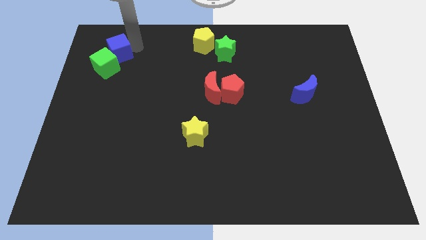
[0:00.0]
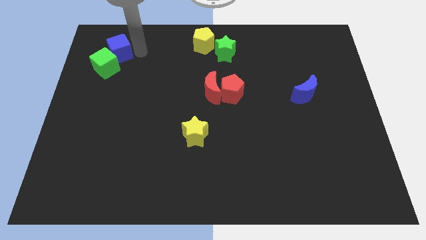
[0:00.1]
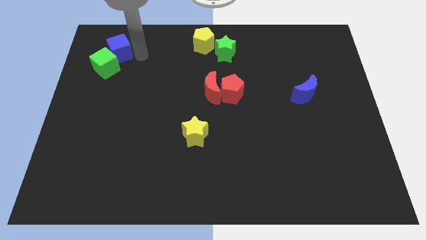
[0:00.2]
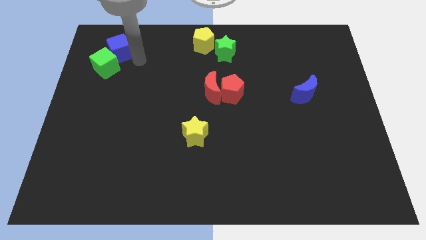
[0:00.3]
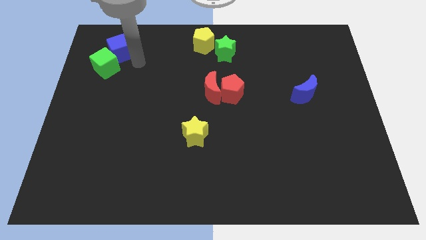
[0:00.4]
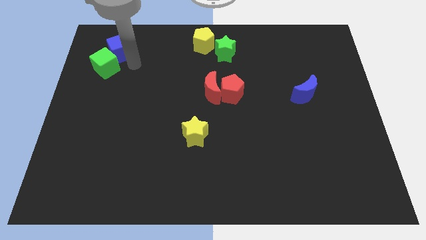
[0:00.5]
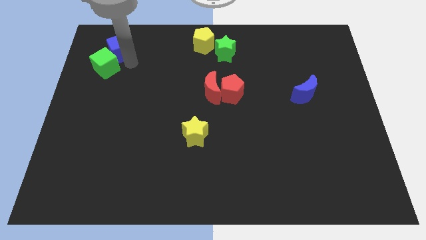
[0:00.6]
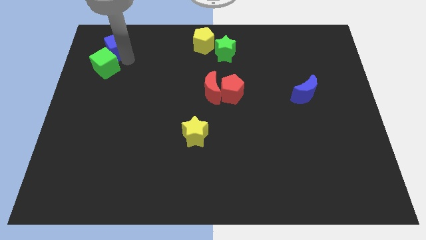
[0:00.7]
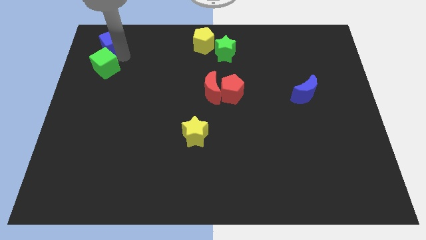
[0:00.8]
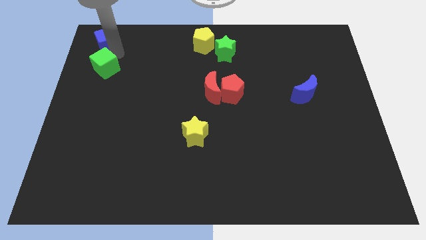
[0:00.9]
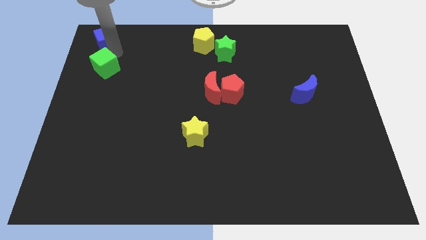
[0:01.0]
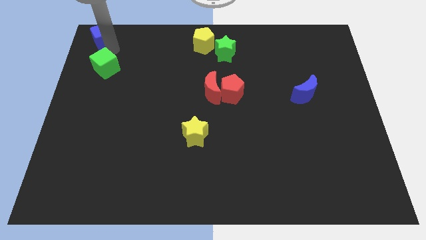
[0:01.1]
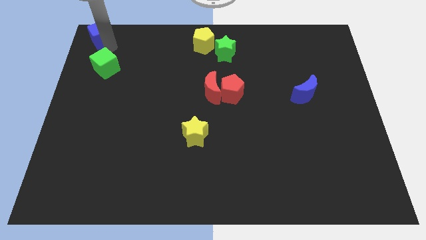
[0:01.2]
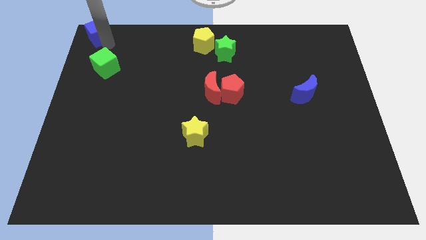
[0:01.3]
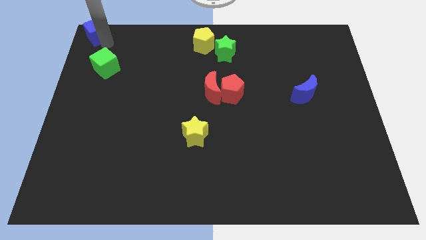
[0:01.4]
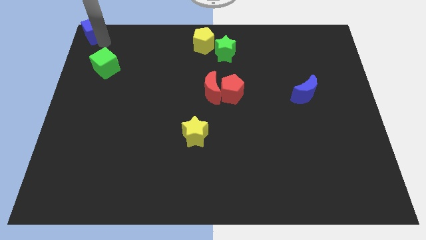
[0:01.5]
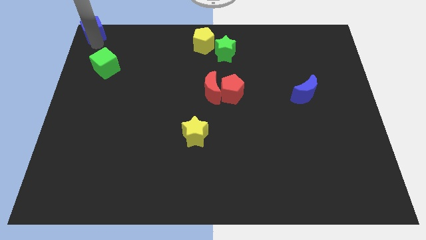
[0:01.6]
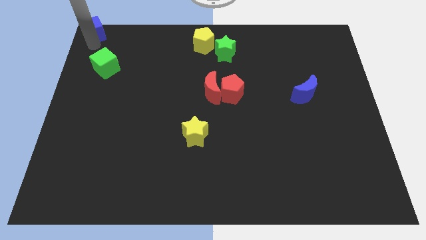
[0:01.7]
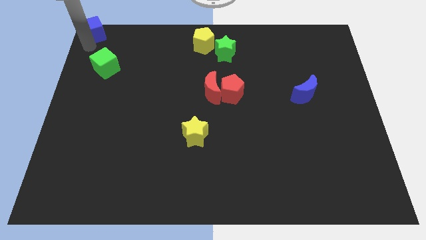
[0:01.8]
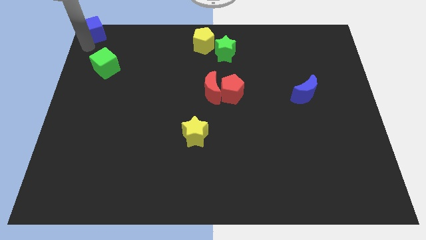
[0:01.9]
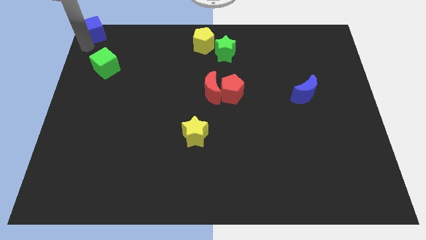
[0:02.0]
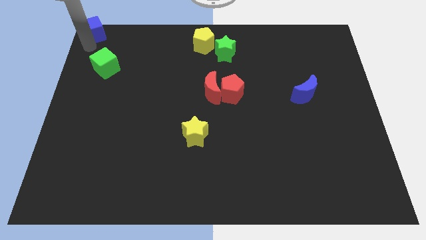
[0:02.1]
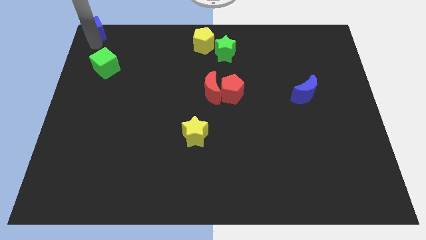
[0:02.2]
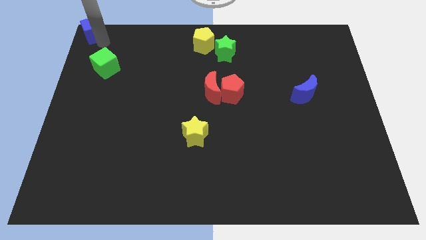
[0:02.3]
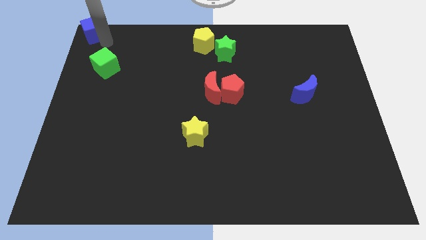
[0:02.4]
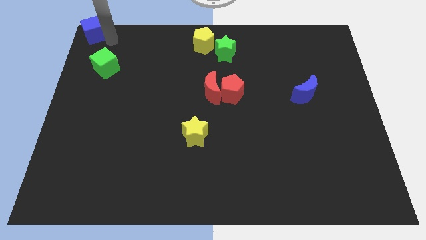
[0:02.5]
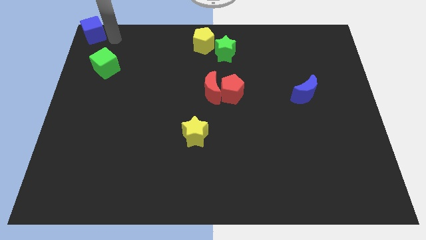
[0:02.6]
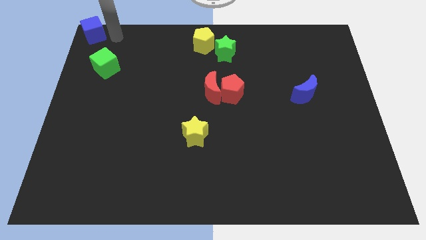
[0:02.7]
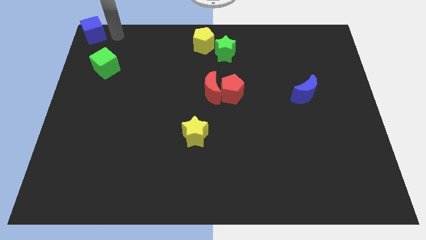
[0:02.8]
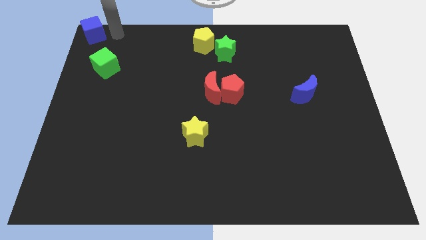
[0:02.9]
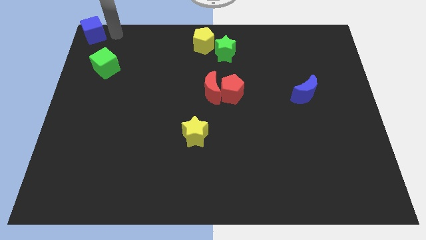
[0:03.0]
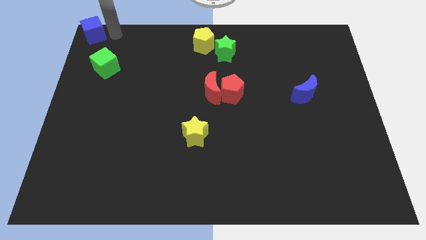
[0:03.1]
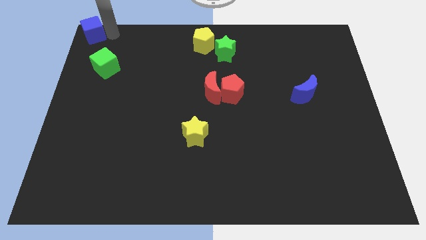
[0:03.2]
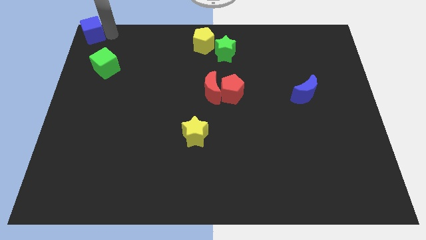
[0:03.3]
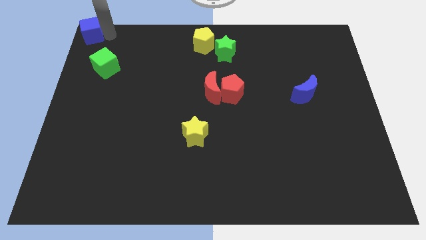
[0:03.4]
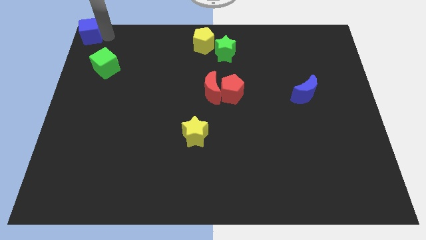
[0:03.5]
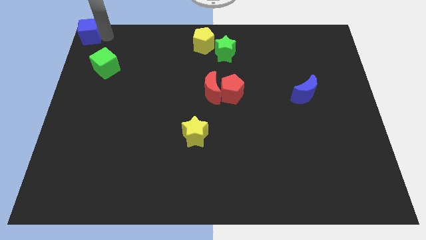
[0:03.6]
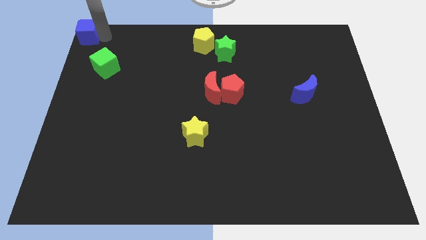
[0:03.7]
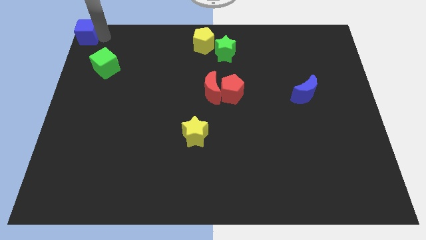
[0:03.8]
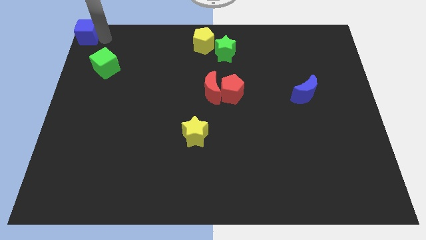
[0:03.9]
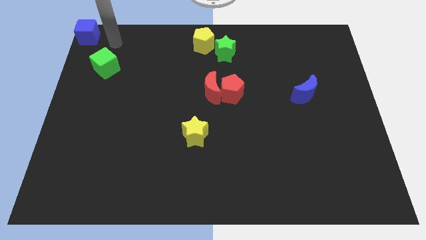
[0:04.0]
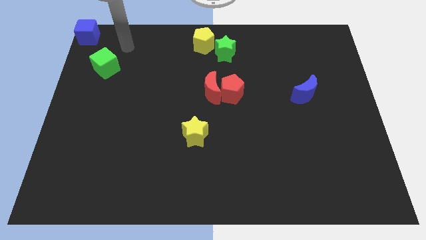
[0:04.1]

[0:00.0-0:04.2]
move the blue cube to the top left corner of the board

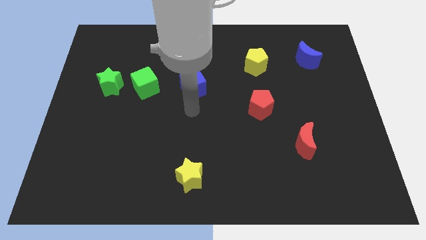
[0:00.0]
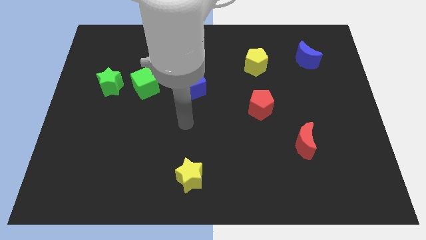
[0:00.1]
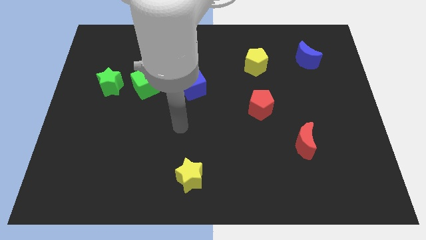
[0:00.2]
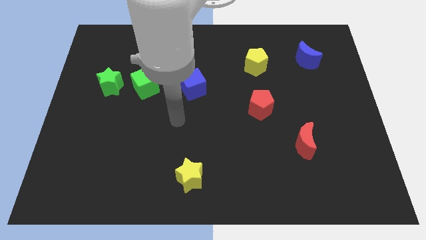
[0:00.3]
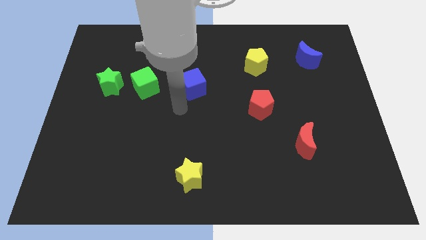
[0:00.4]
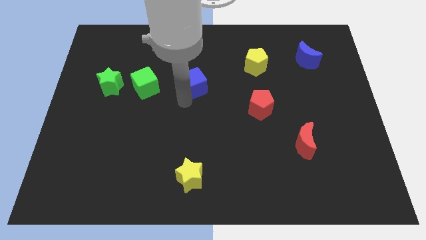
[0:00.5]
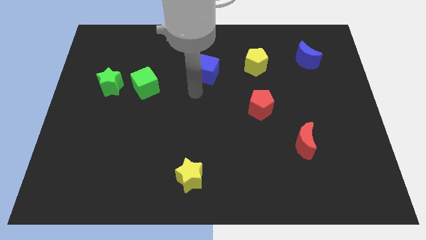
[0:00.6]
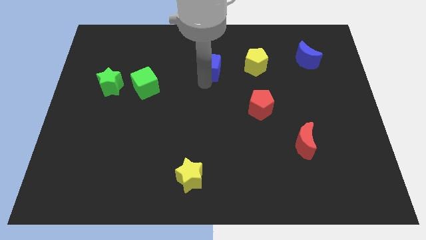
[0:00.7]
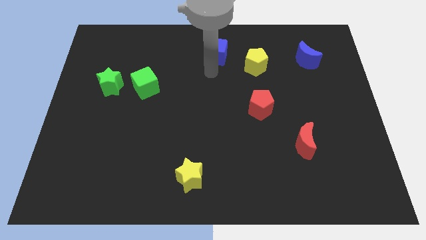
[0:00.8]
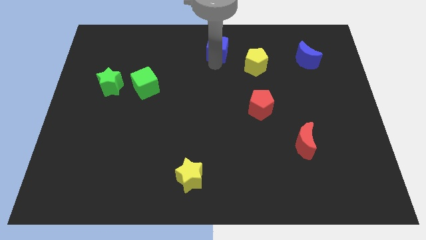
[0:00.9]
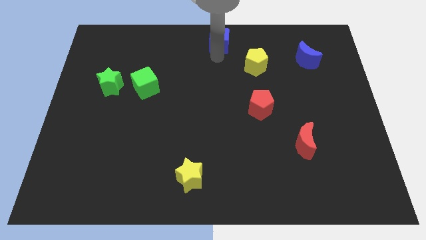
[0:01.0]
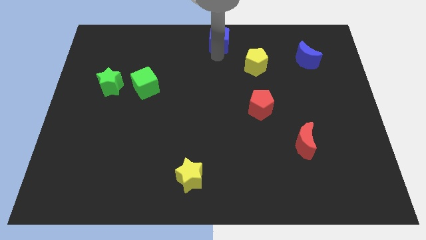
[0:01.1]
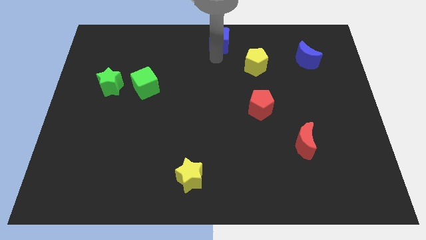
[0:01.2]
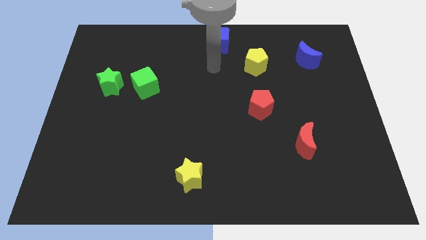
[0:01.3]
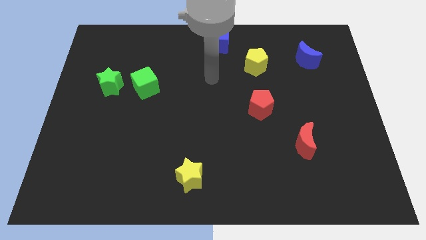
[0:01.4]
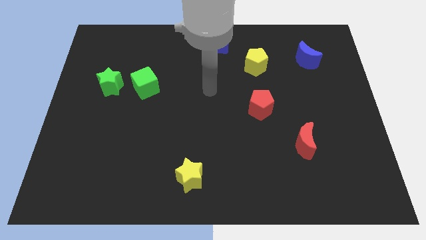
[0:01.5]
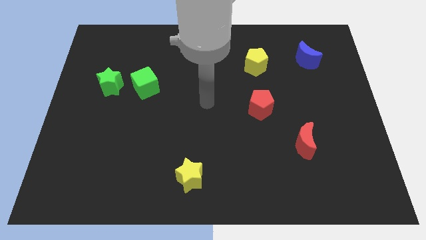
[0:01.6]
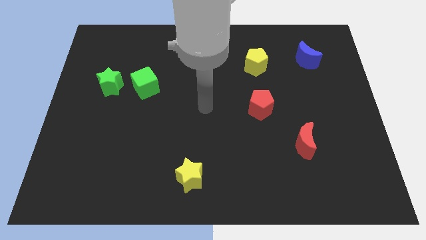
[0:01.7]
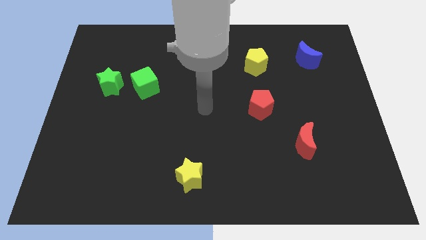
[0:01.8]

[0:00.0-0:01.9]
push blue cube to the top center of the board

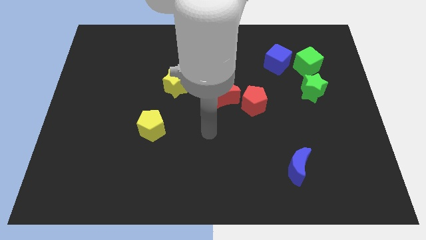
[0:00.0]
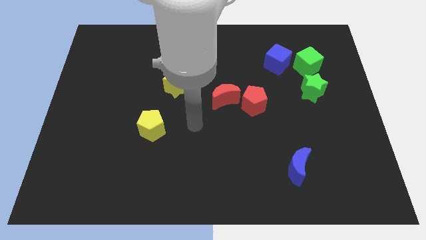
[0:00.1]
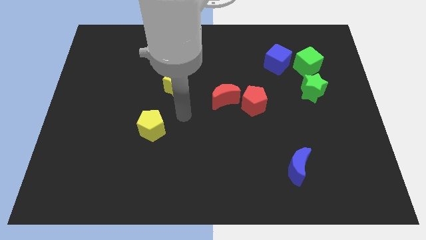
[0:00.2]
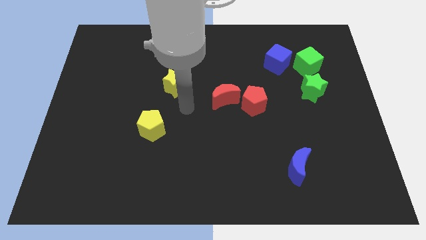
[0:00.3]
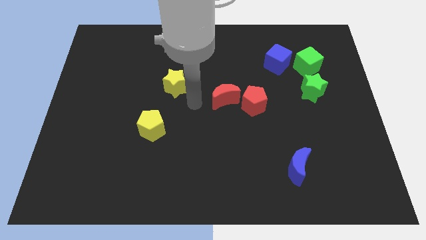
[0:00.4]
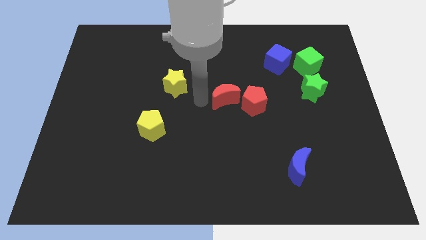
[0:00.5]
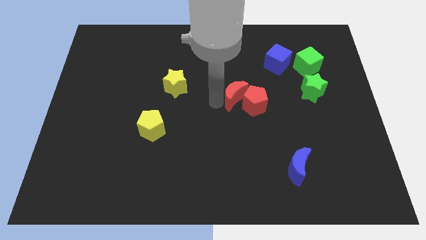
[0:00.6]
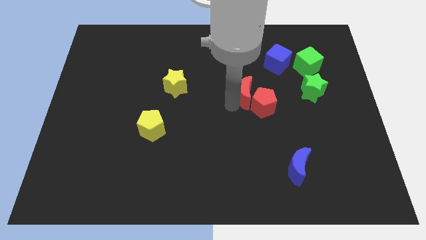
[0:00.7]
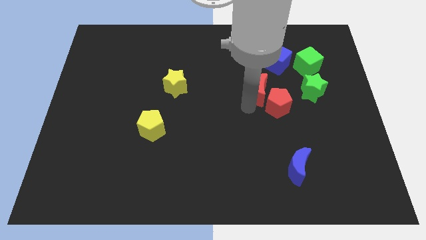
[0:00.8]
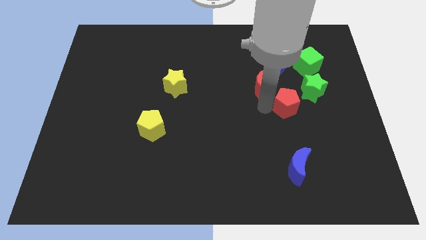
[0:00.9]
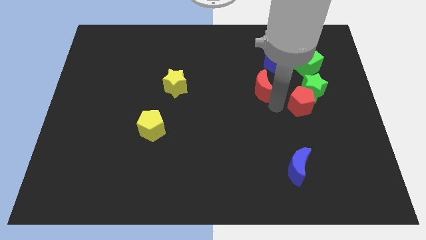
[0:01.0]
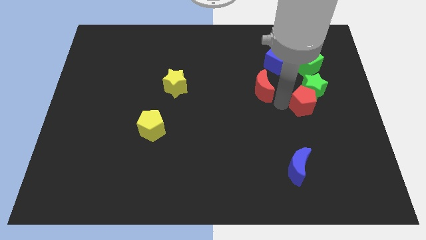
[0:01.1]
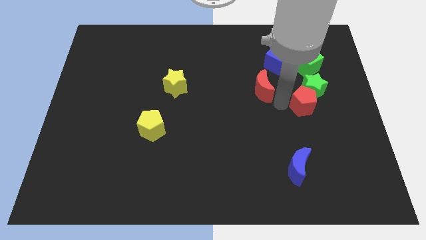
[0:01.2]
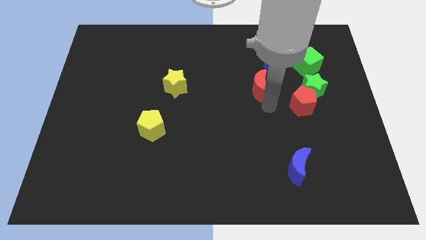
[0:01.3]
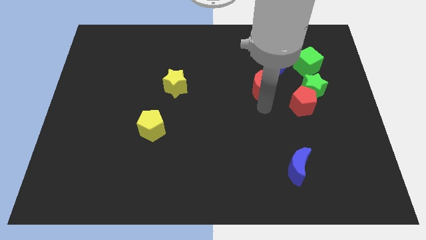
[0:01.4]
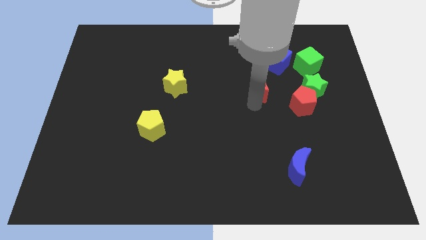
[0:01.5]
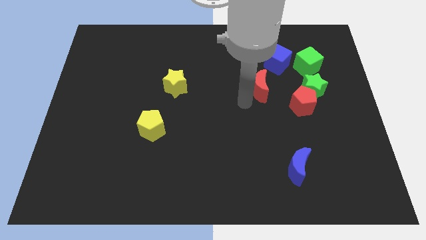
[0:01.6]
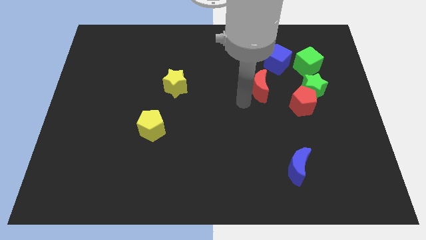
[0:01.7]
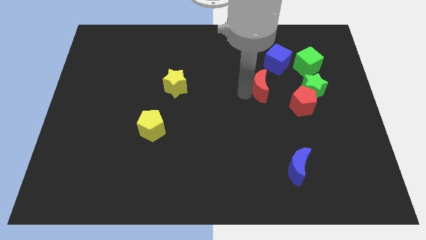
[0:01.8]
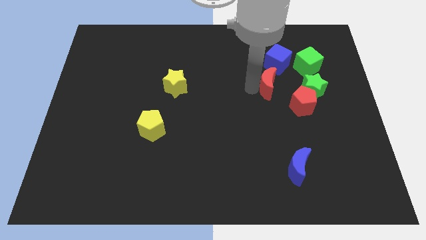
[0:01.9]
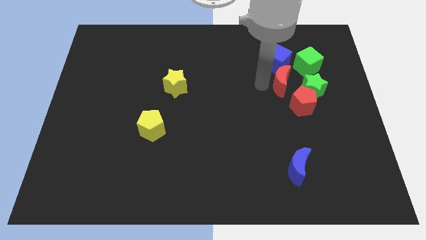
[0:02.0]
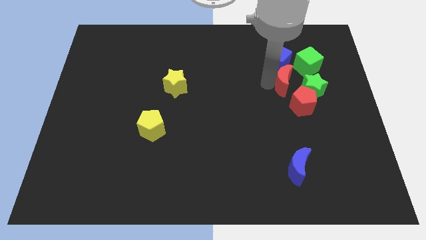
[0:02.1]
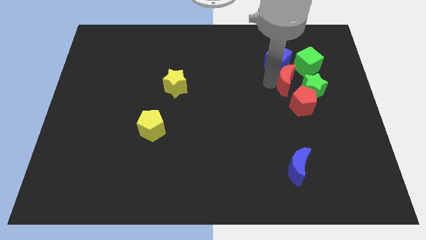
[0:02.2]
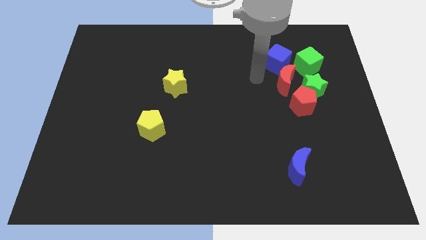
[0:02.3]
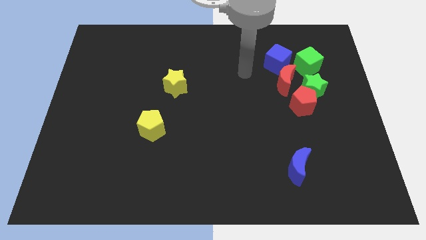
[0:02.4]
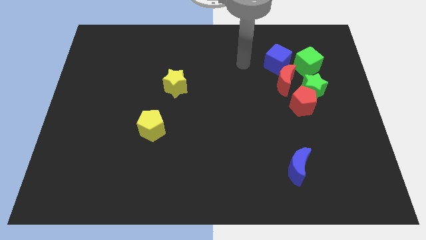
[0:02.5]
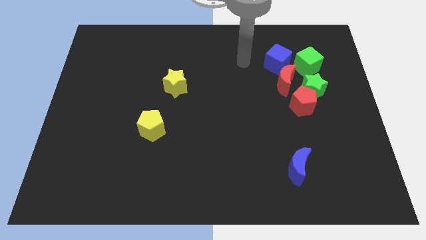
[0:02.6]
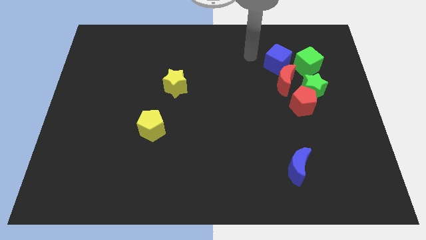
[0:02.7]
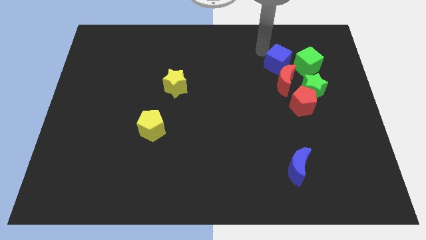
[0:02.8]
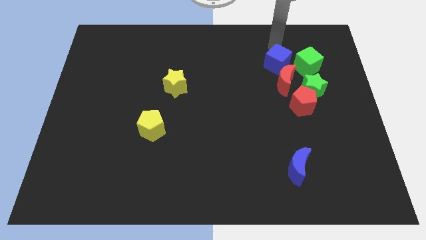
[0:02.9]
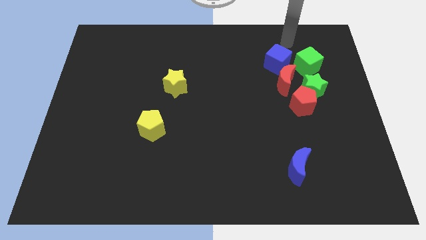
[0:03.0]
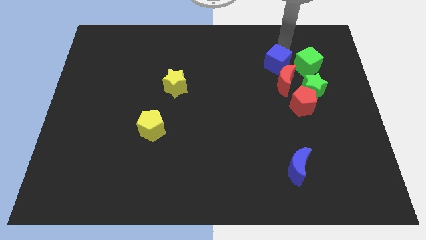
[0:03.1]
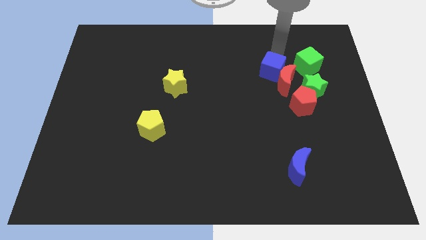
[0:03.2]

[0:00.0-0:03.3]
move the red moon close to the green star
